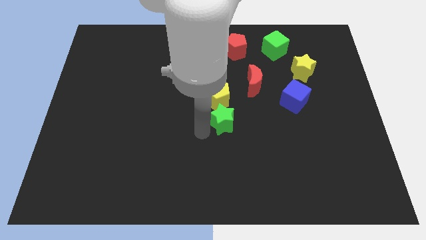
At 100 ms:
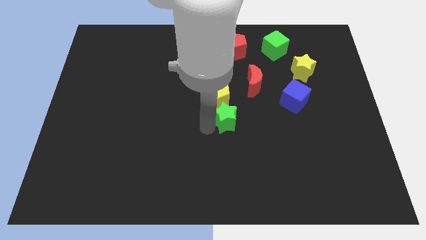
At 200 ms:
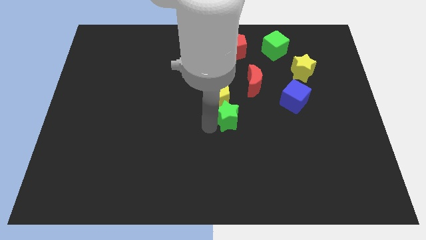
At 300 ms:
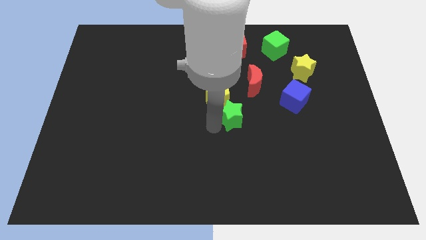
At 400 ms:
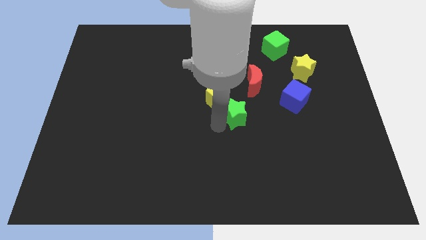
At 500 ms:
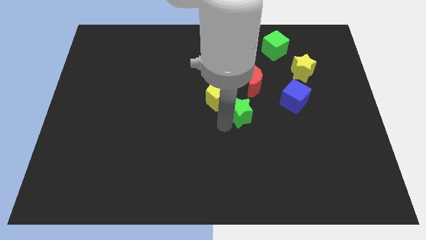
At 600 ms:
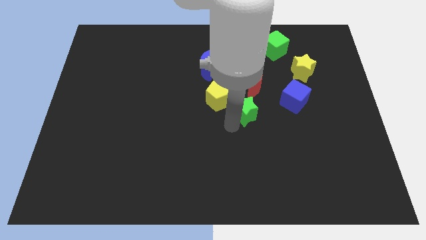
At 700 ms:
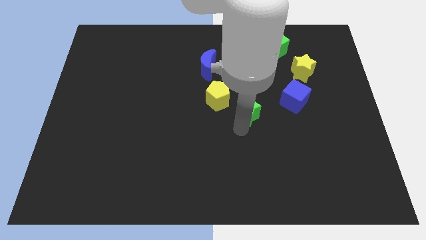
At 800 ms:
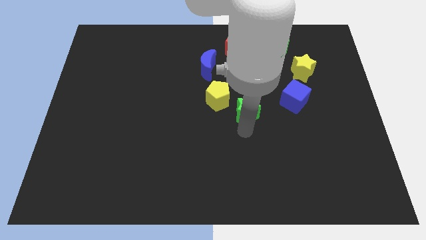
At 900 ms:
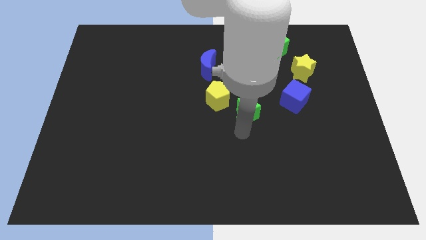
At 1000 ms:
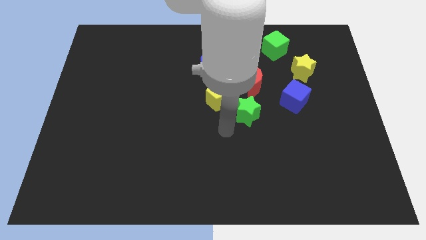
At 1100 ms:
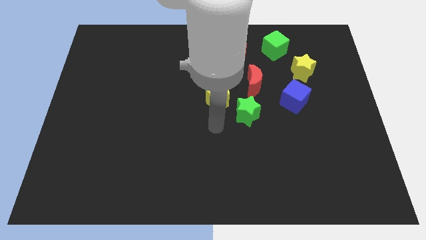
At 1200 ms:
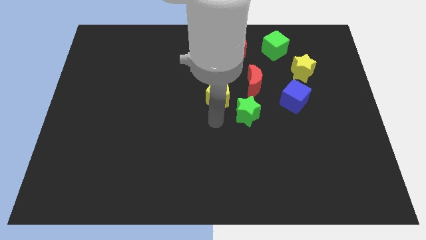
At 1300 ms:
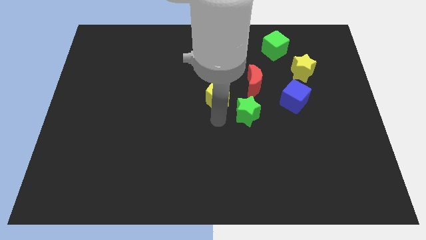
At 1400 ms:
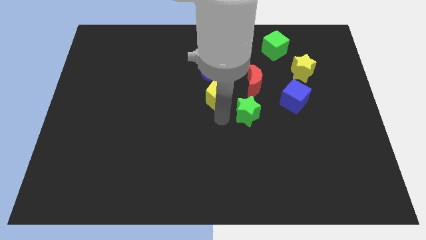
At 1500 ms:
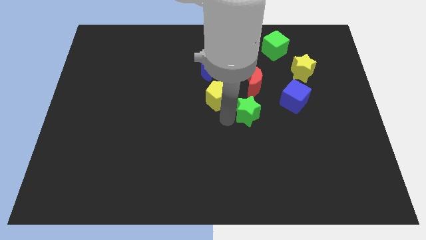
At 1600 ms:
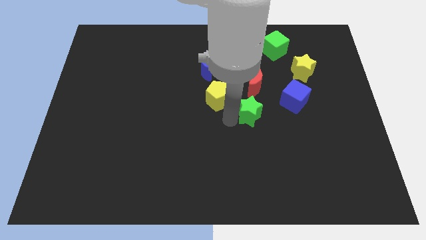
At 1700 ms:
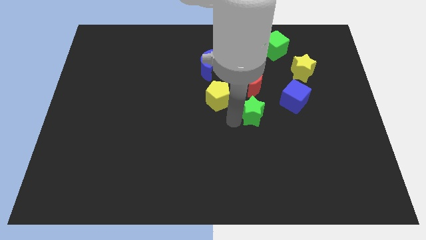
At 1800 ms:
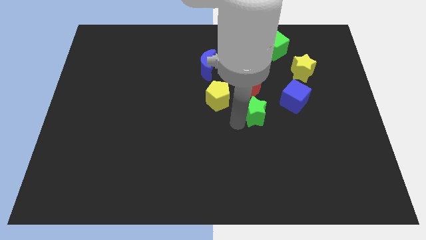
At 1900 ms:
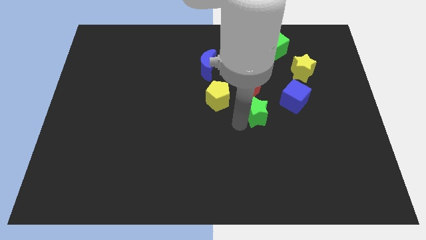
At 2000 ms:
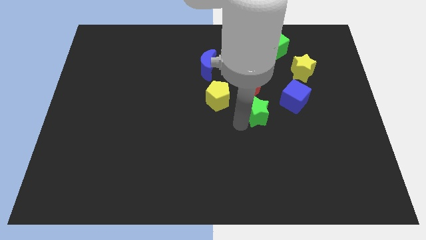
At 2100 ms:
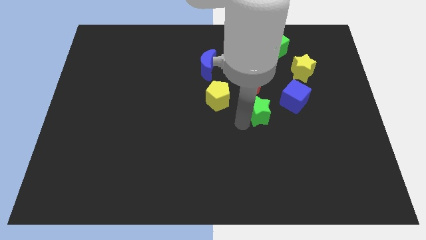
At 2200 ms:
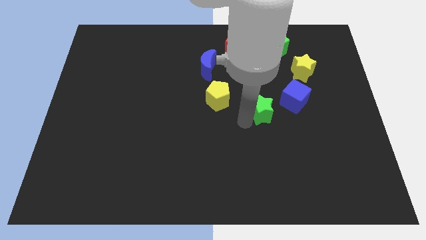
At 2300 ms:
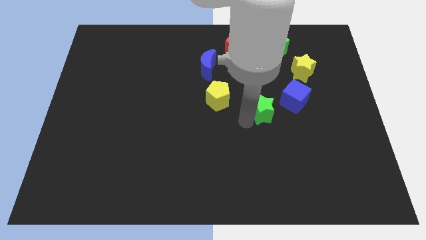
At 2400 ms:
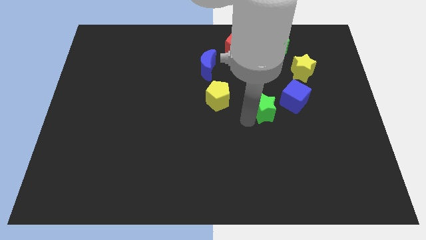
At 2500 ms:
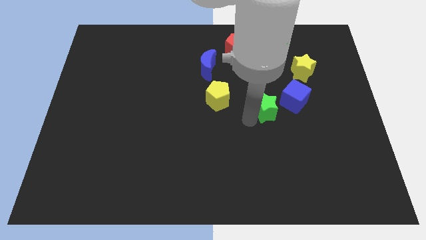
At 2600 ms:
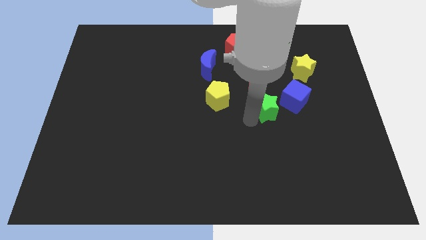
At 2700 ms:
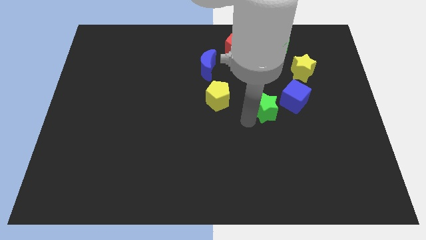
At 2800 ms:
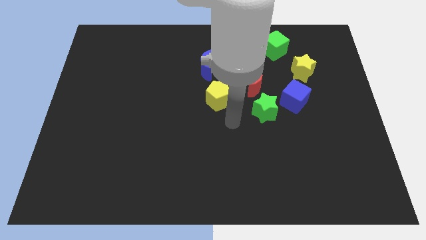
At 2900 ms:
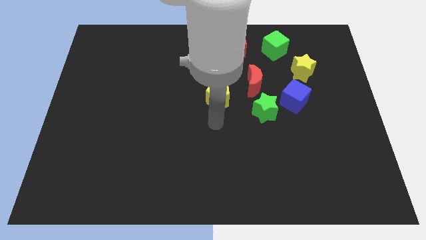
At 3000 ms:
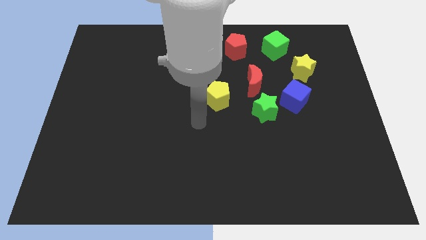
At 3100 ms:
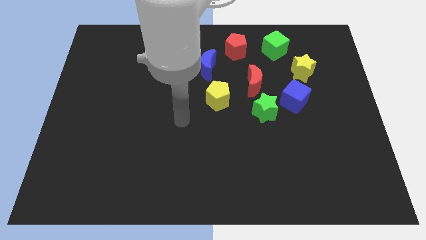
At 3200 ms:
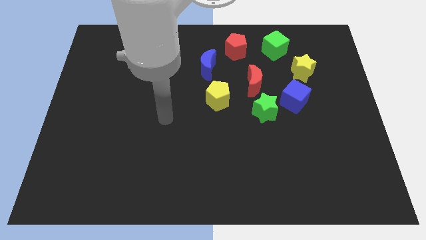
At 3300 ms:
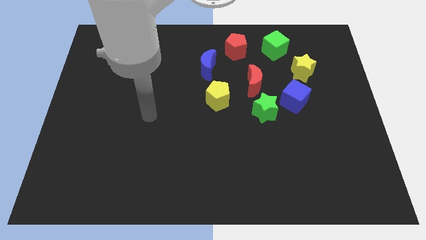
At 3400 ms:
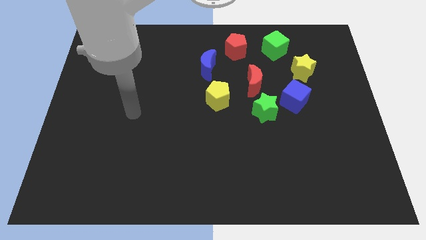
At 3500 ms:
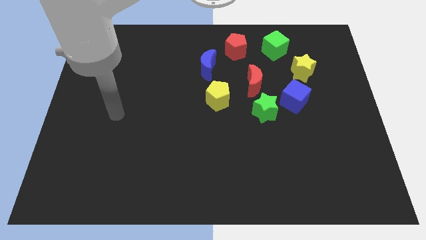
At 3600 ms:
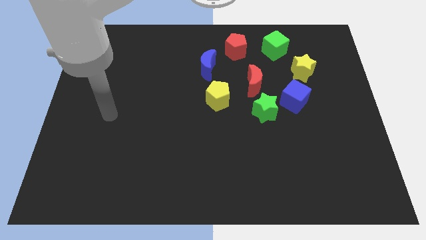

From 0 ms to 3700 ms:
push the green star to the bottom of the red crescent

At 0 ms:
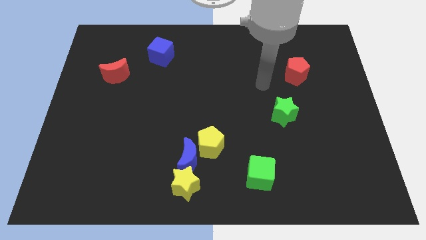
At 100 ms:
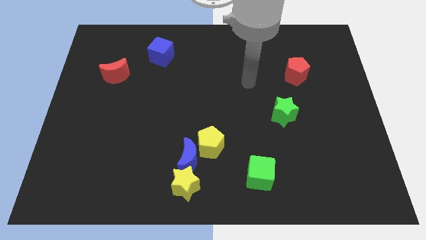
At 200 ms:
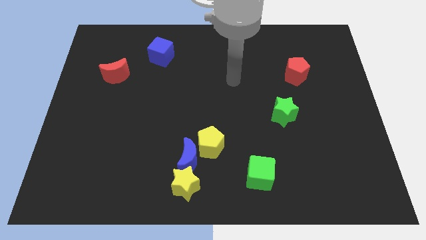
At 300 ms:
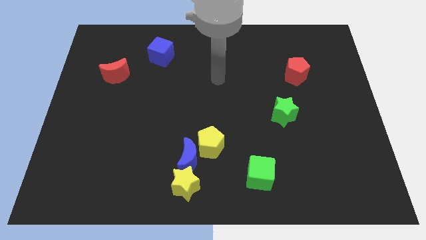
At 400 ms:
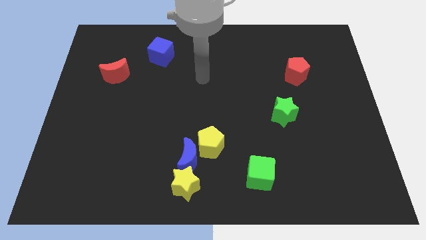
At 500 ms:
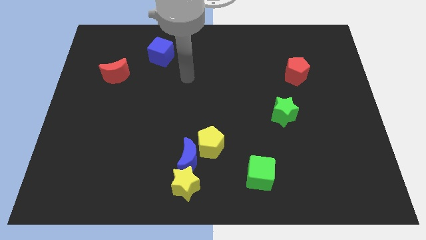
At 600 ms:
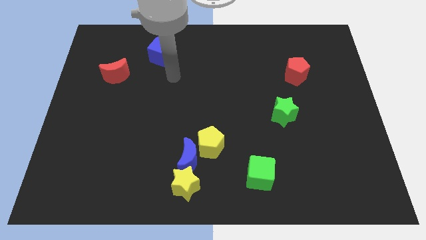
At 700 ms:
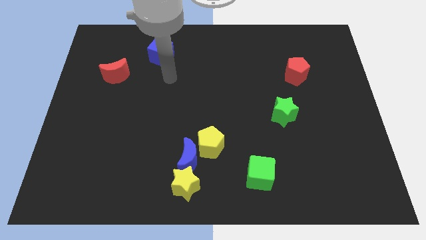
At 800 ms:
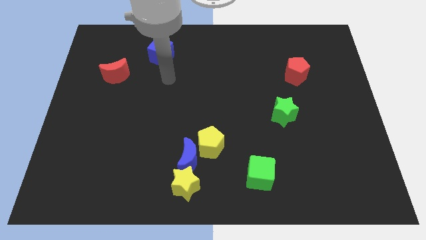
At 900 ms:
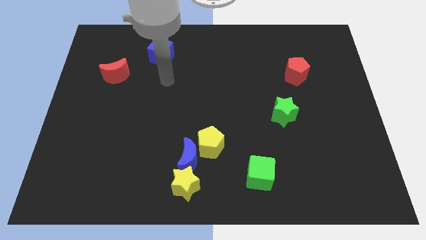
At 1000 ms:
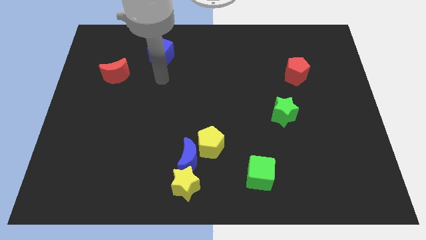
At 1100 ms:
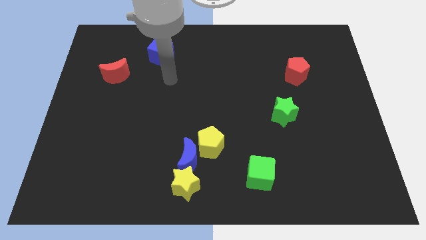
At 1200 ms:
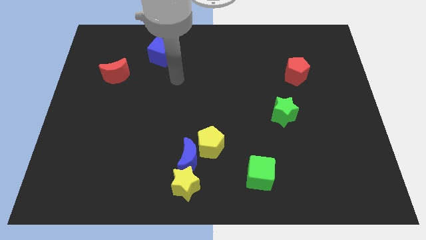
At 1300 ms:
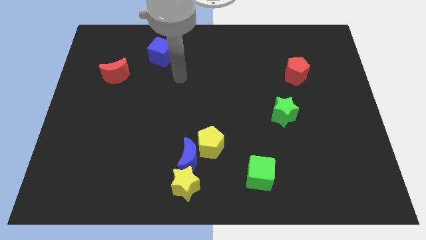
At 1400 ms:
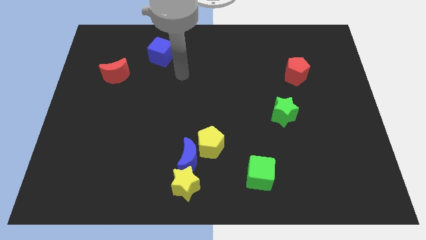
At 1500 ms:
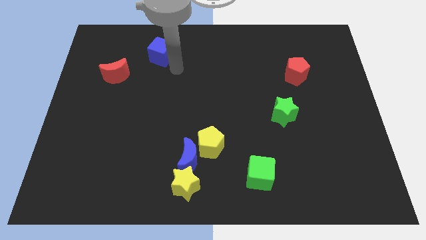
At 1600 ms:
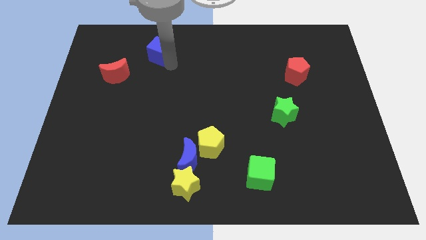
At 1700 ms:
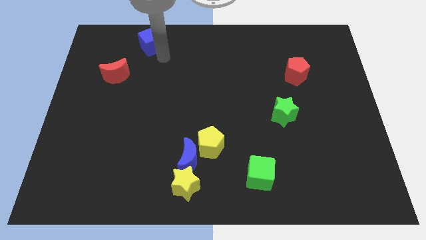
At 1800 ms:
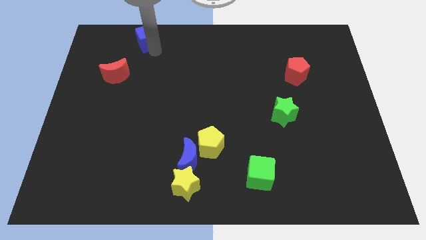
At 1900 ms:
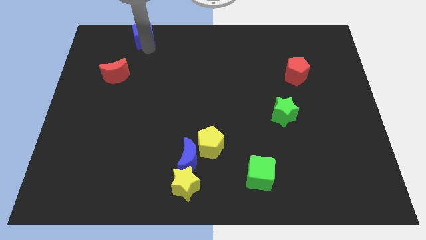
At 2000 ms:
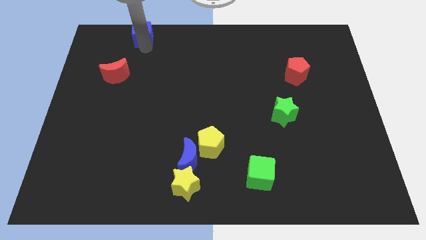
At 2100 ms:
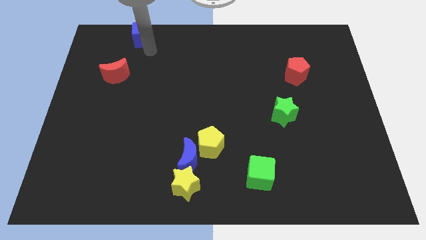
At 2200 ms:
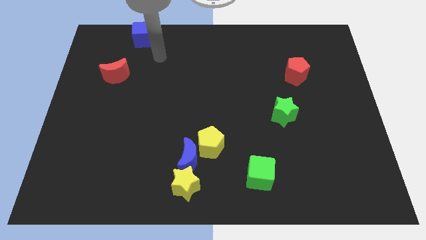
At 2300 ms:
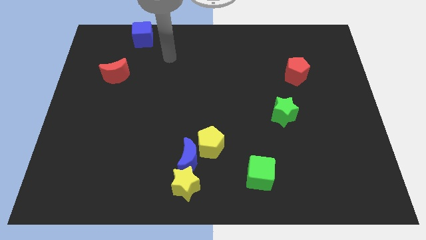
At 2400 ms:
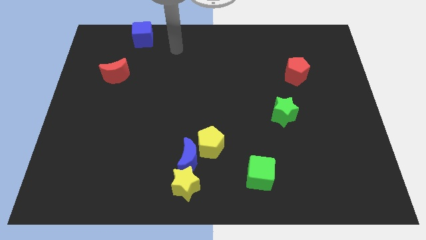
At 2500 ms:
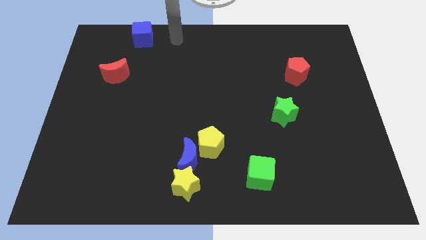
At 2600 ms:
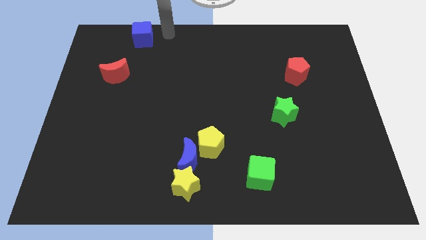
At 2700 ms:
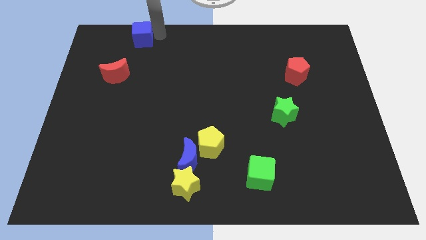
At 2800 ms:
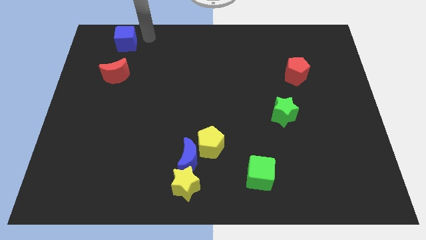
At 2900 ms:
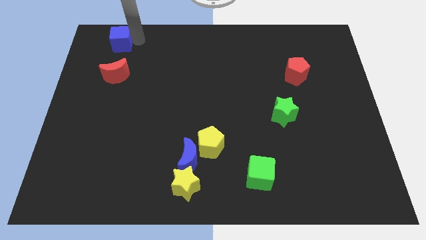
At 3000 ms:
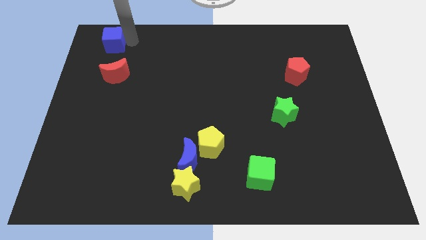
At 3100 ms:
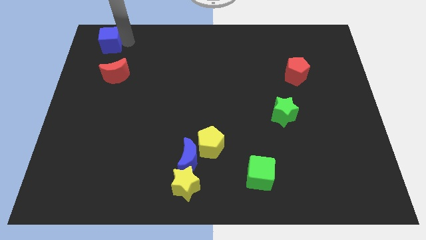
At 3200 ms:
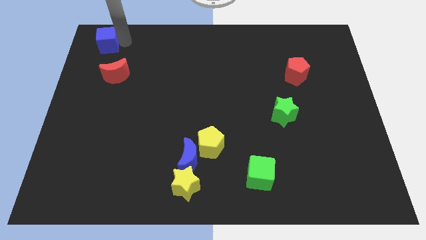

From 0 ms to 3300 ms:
place the blue cube above the red crescent

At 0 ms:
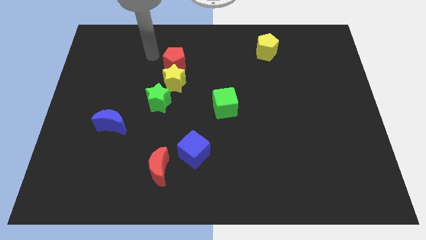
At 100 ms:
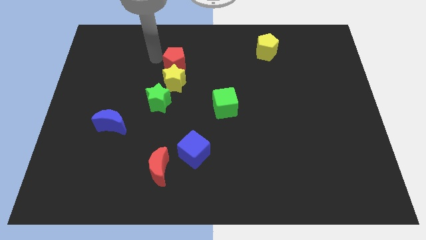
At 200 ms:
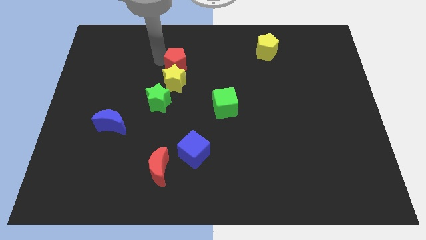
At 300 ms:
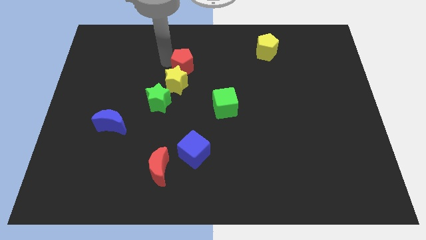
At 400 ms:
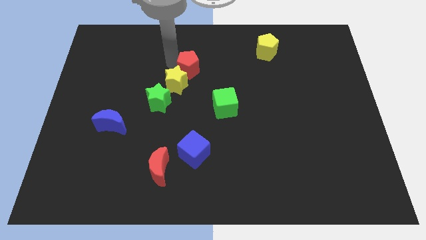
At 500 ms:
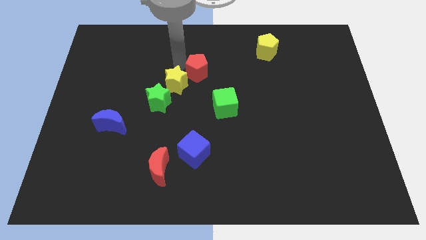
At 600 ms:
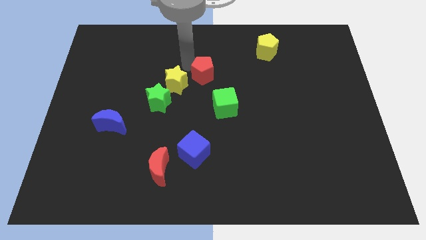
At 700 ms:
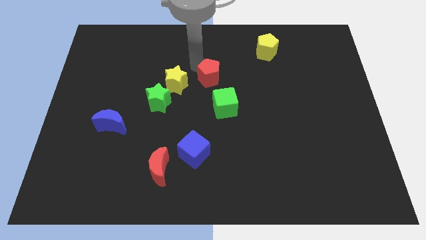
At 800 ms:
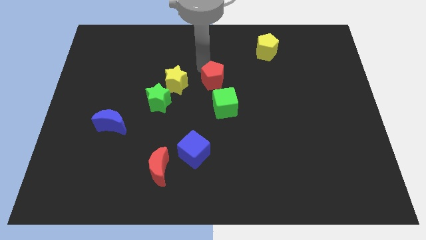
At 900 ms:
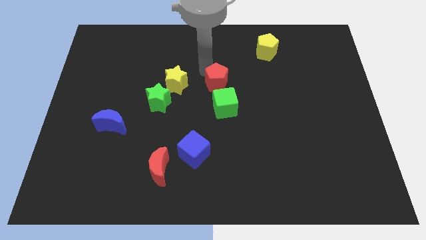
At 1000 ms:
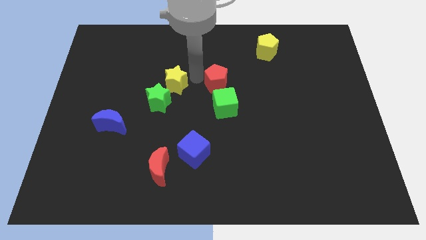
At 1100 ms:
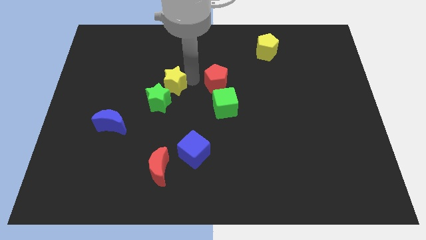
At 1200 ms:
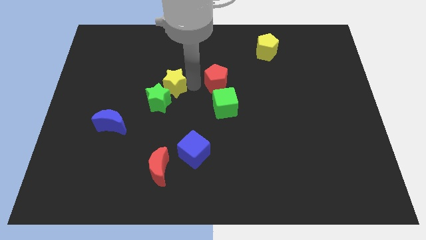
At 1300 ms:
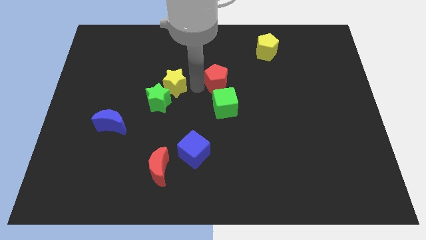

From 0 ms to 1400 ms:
push the red pentagon to the top side of the green cube

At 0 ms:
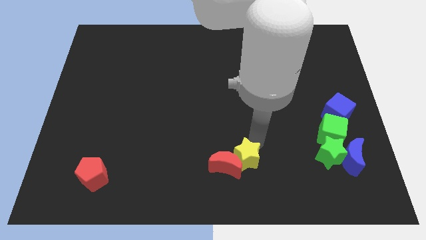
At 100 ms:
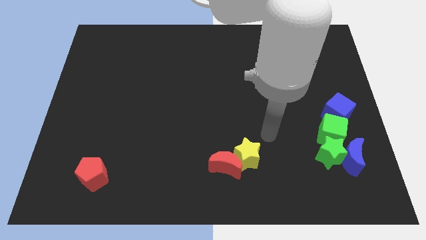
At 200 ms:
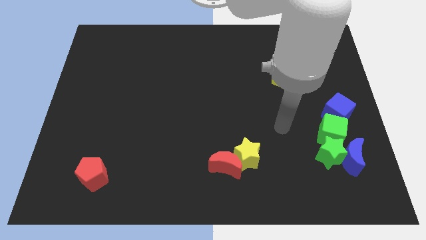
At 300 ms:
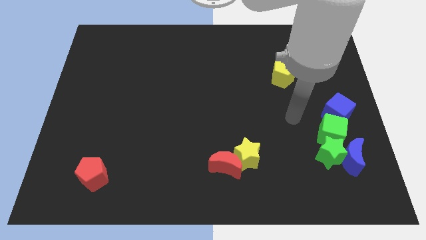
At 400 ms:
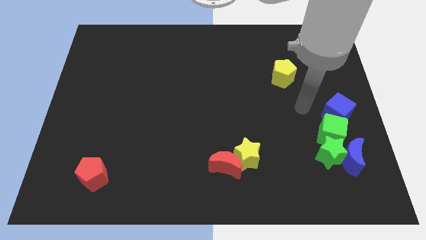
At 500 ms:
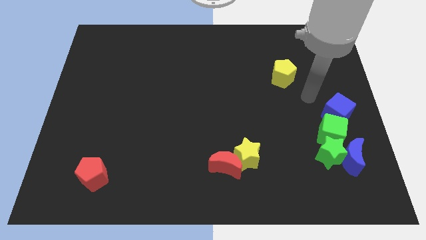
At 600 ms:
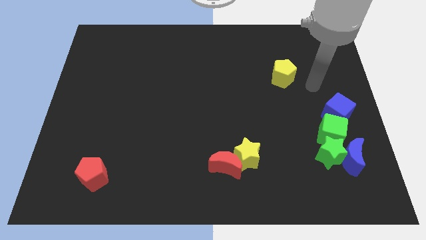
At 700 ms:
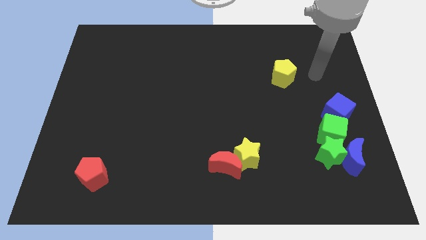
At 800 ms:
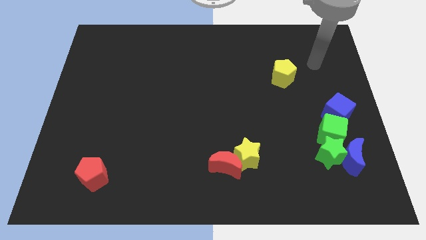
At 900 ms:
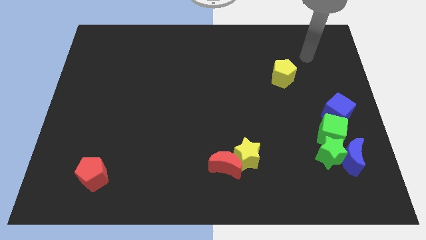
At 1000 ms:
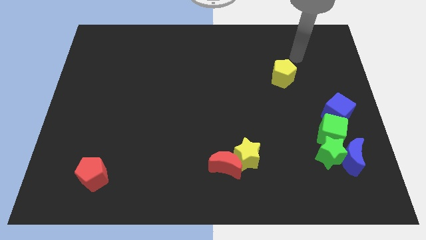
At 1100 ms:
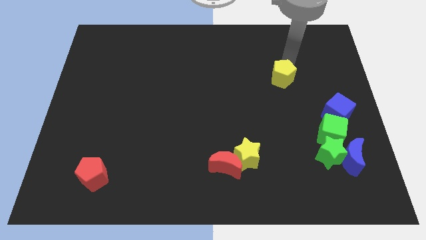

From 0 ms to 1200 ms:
touch the top of the yellow pentagon
